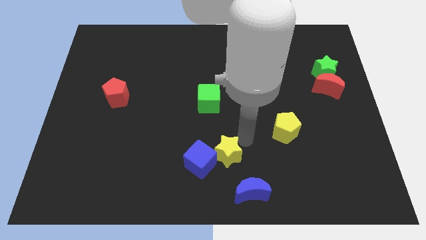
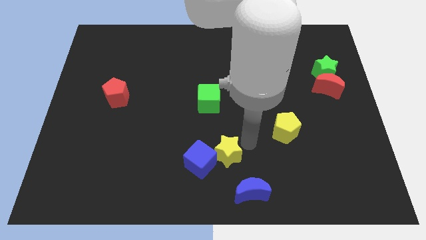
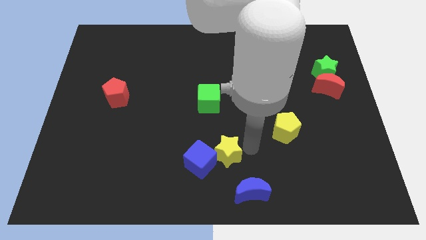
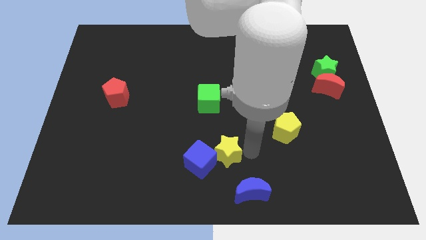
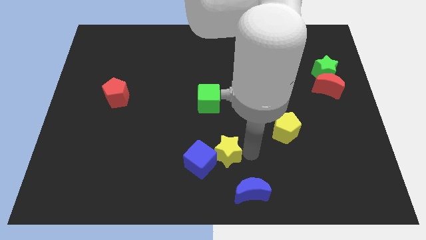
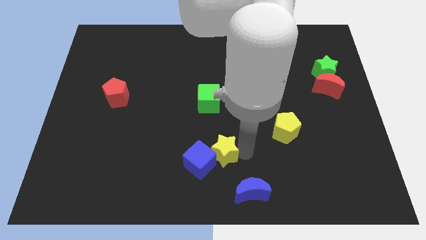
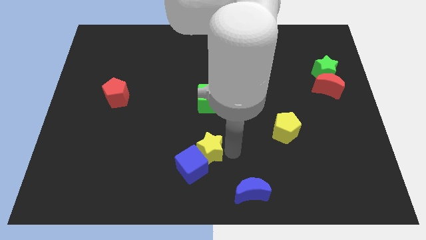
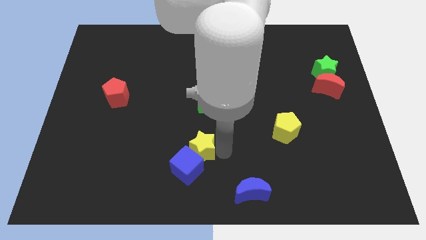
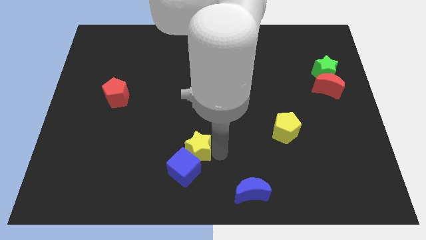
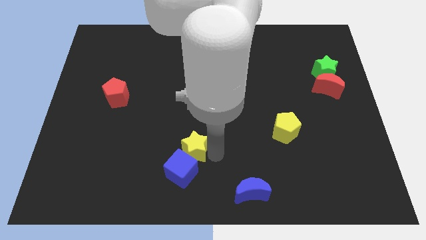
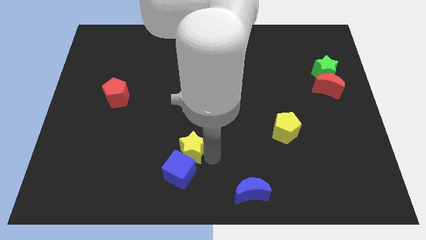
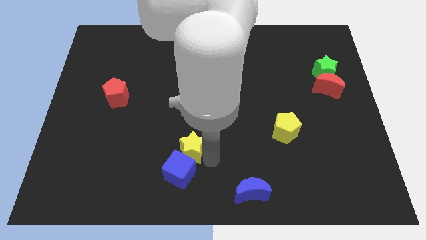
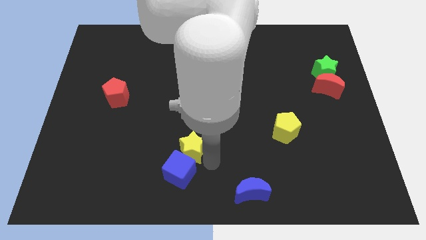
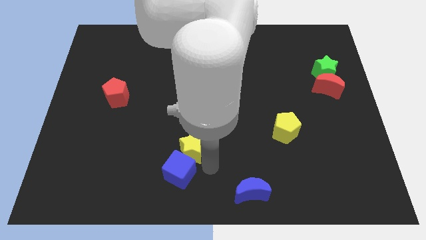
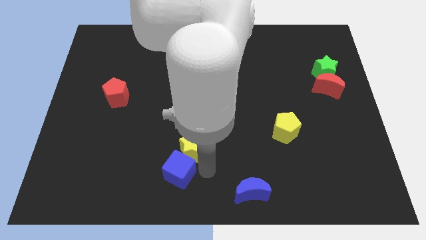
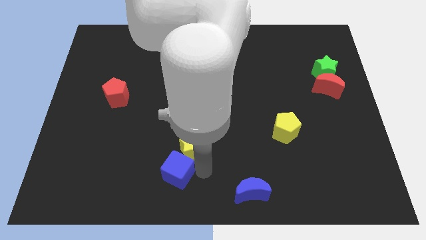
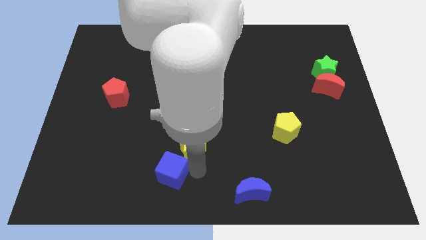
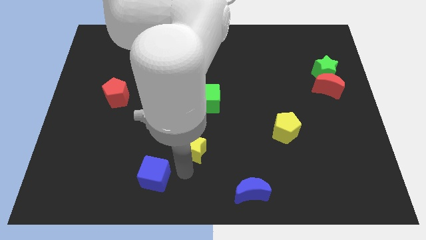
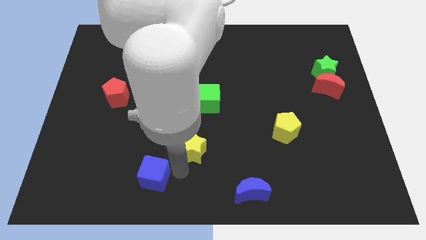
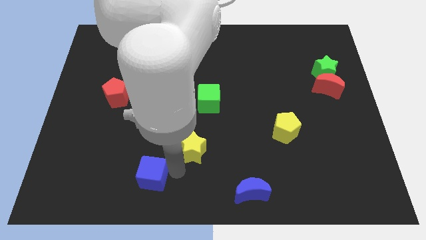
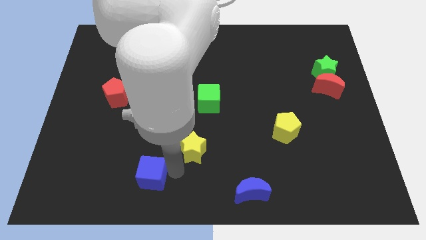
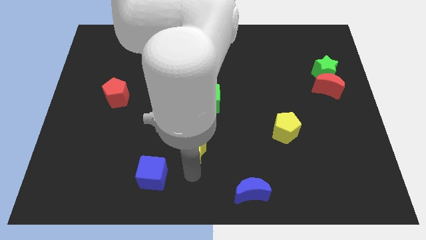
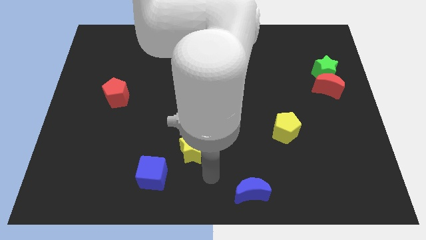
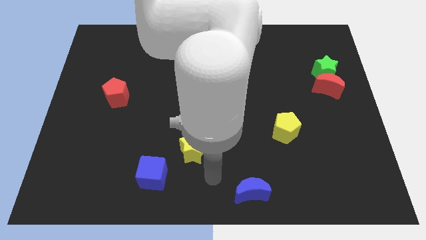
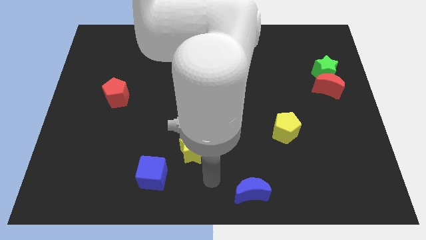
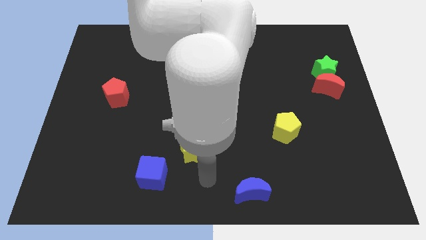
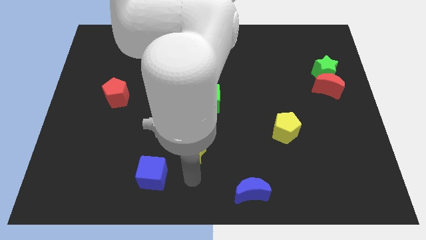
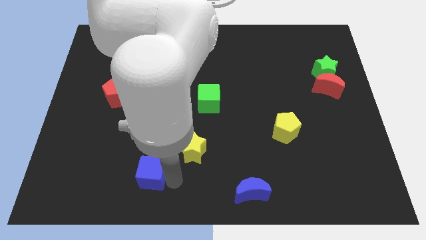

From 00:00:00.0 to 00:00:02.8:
separate the blue square from the yellow star

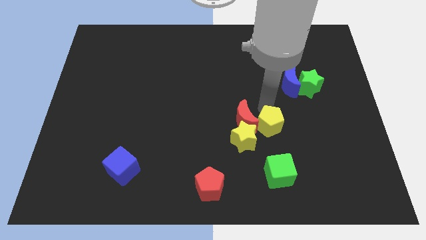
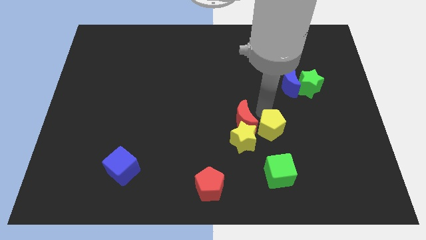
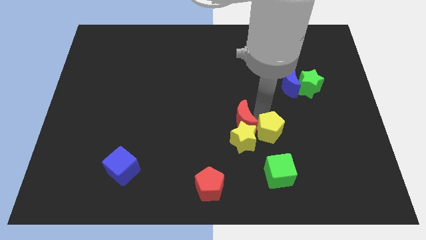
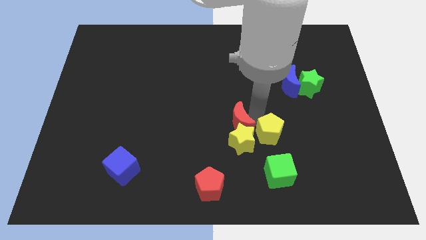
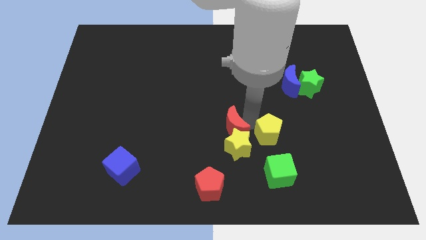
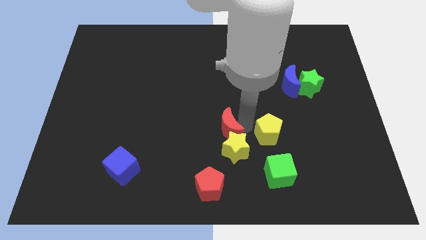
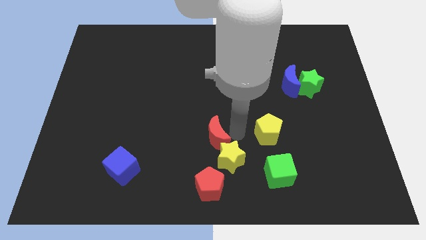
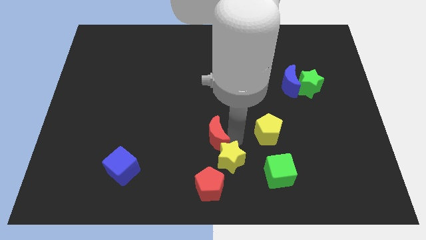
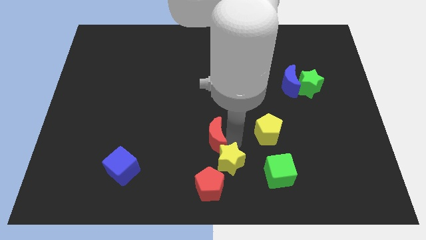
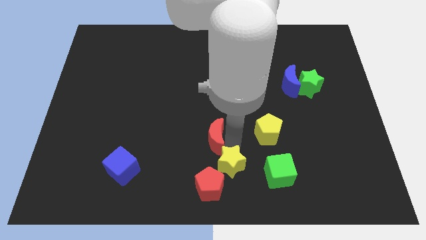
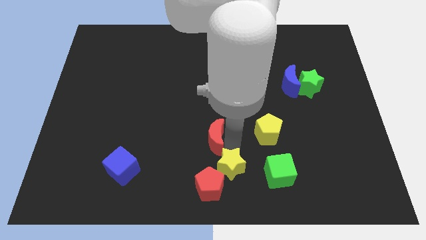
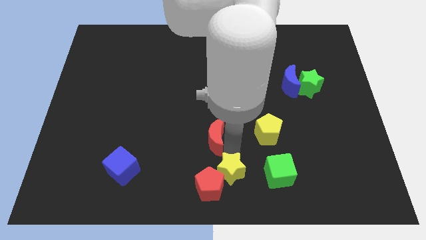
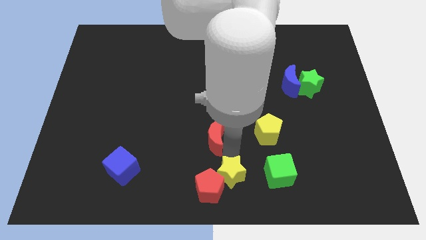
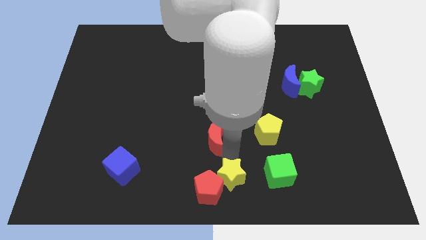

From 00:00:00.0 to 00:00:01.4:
separate the red moon and yellow star from yellow pentagon

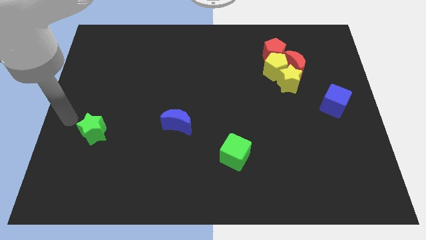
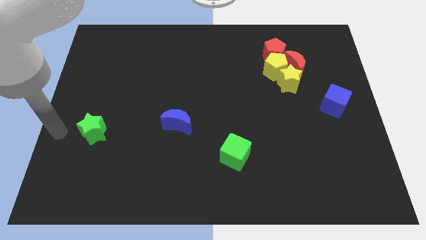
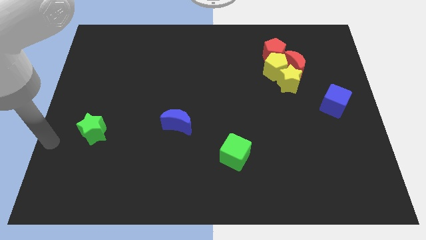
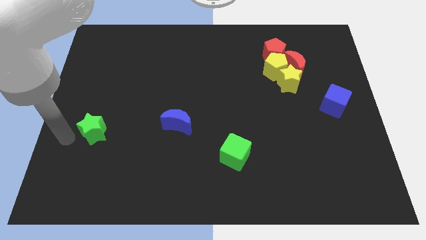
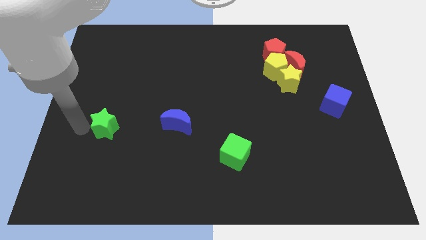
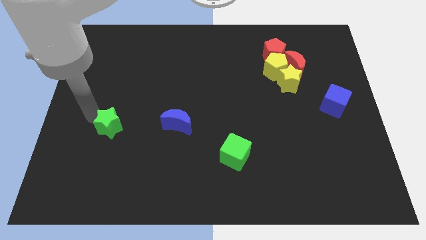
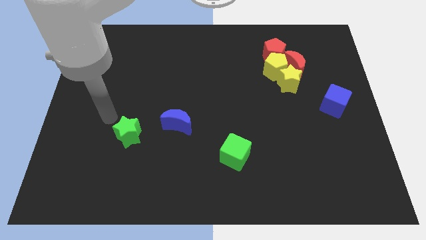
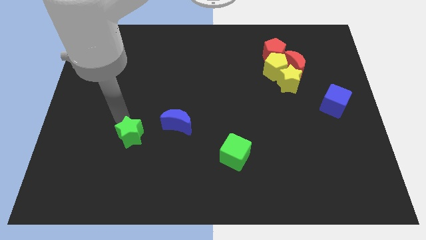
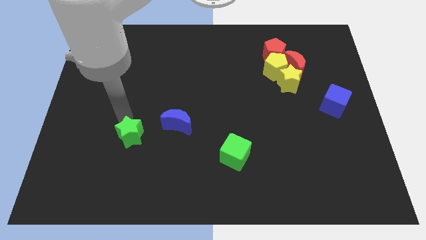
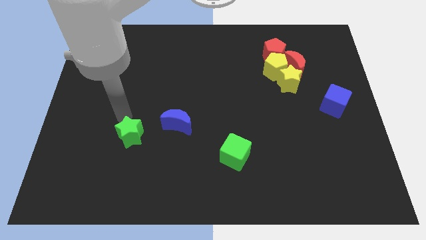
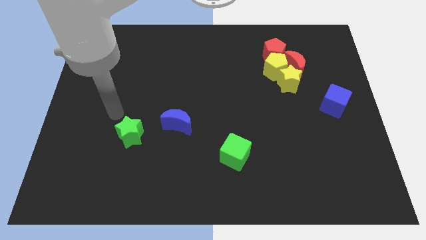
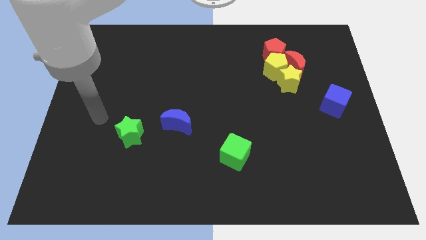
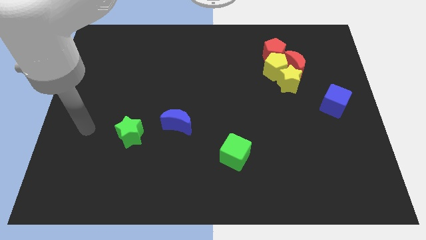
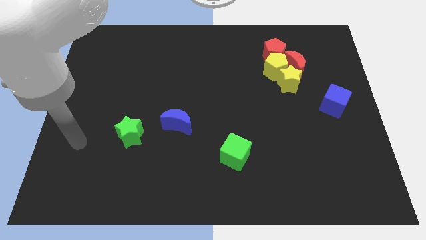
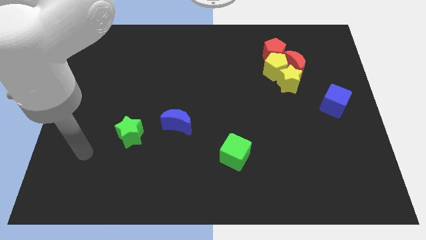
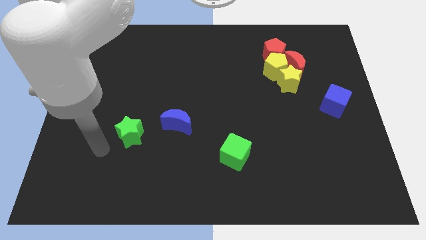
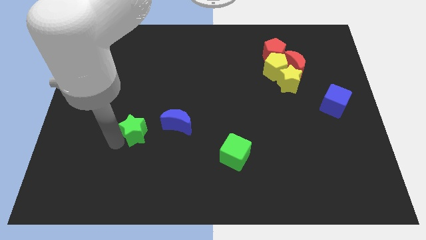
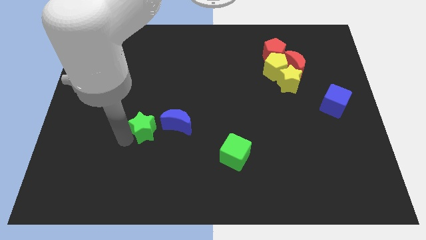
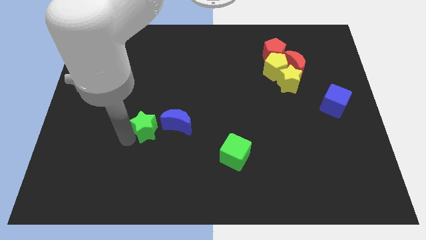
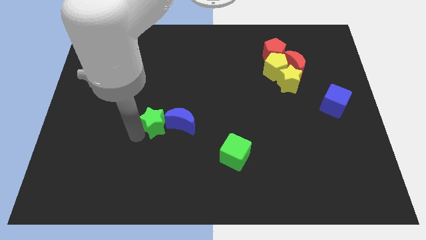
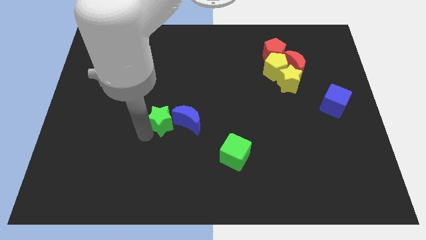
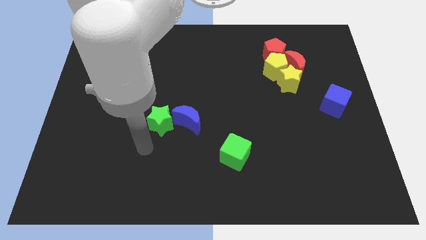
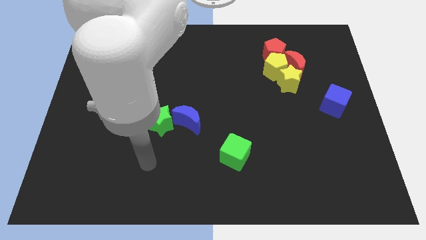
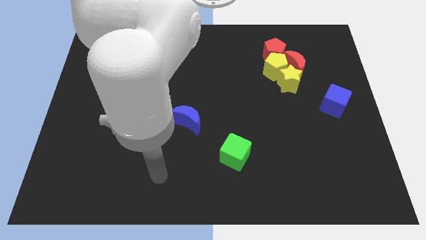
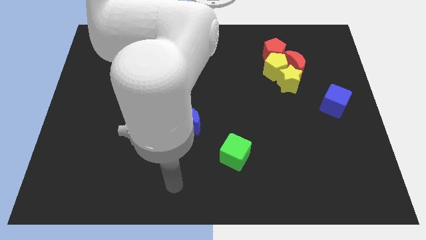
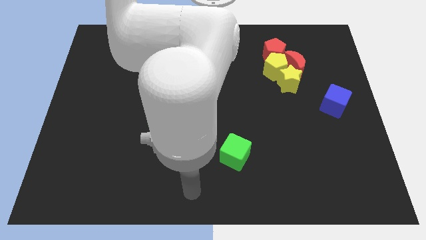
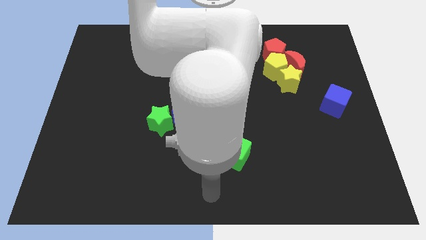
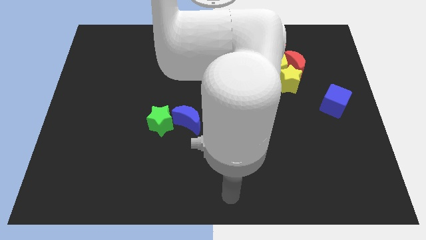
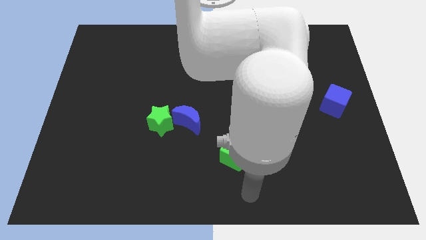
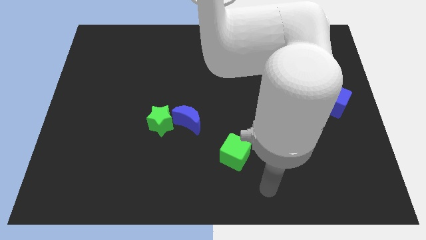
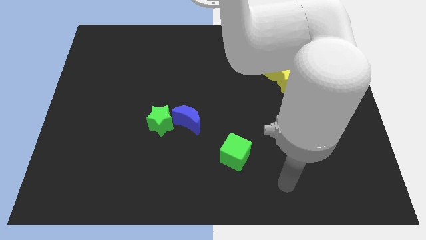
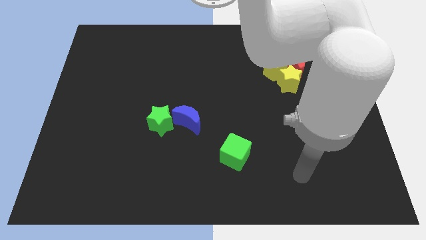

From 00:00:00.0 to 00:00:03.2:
move the green star left to the blue crescent

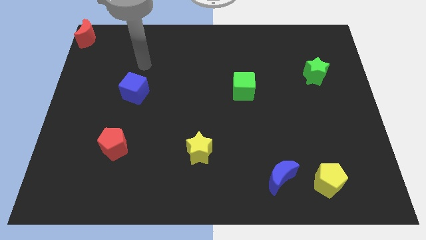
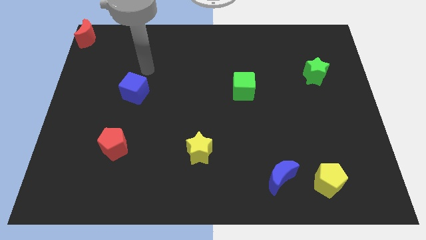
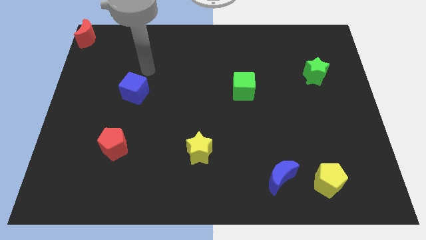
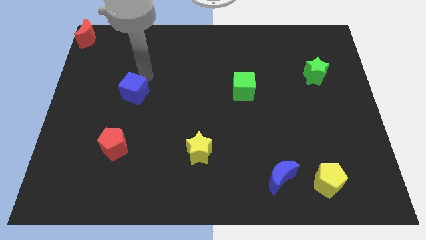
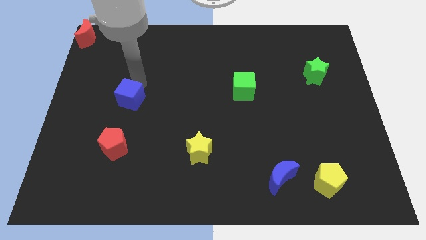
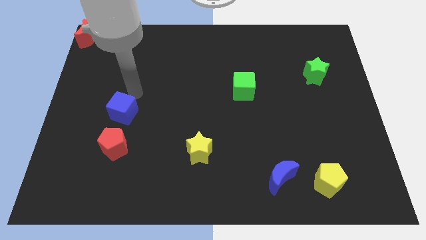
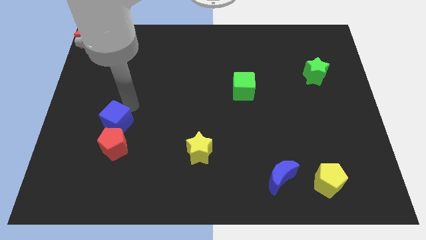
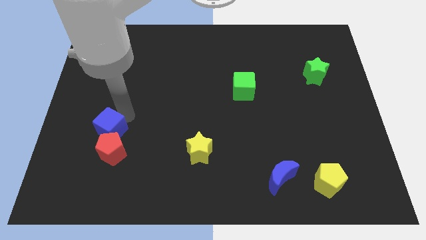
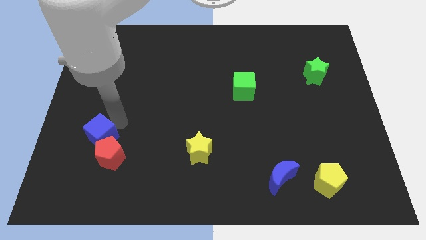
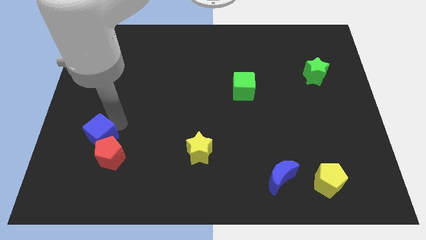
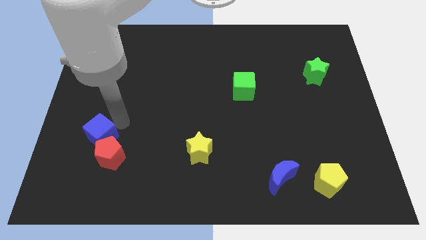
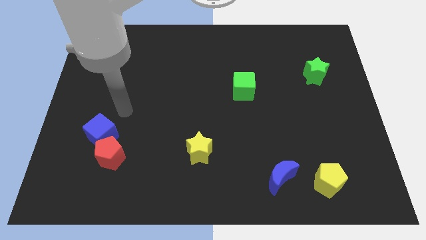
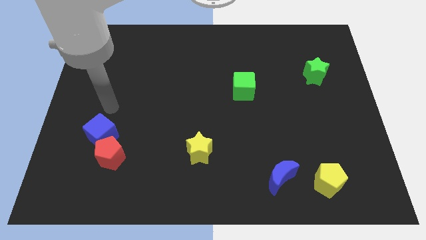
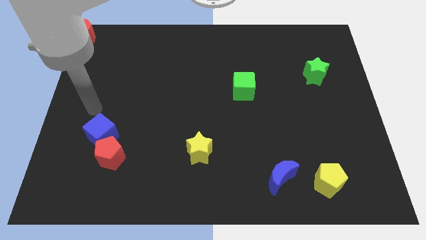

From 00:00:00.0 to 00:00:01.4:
push the blue cube into red pentagon
